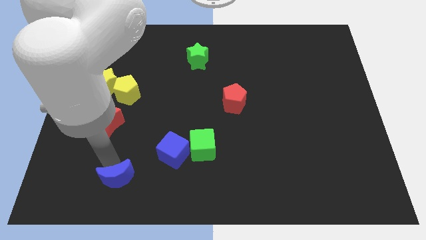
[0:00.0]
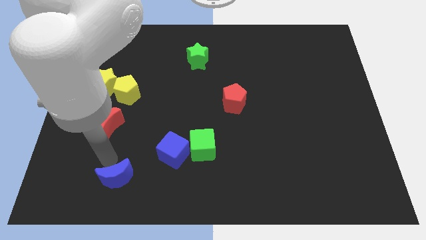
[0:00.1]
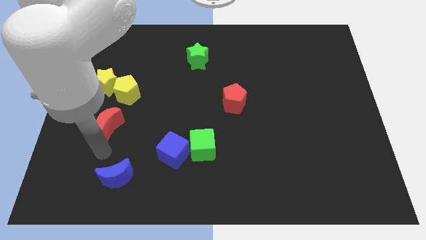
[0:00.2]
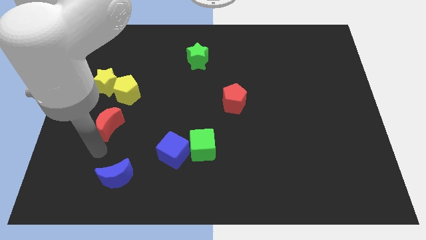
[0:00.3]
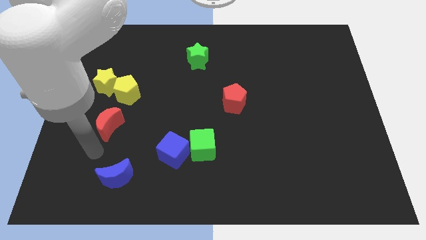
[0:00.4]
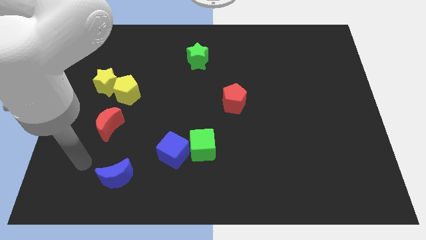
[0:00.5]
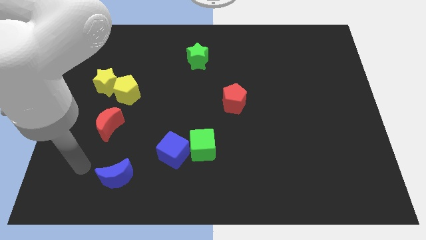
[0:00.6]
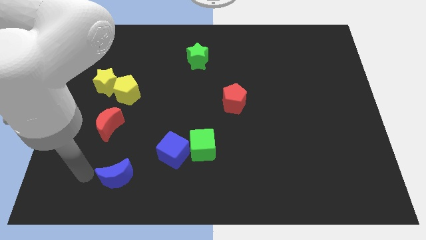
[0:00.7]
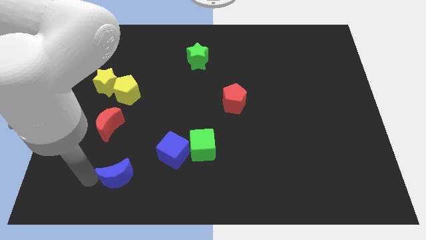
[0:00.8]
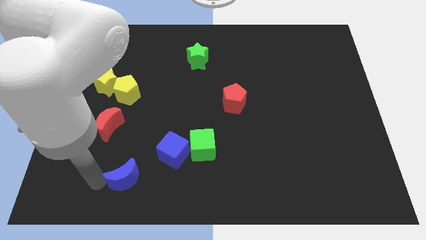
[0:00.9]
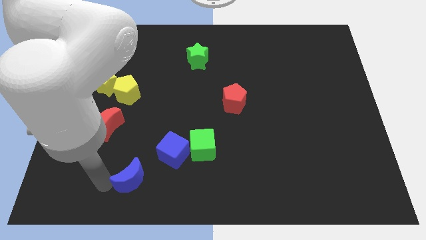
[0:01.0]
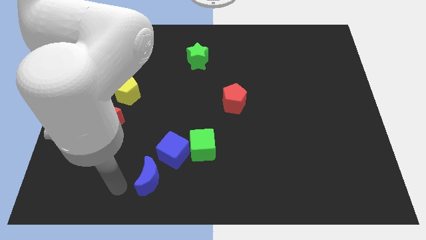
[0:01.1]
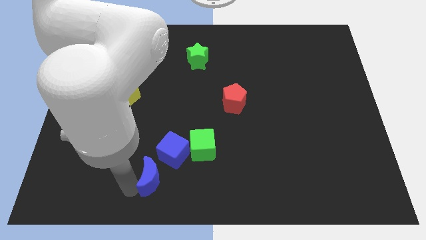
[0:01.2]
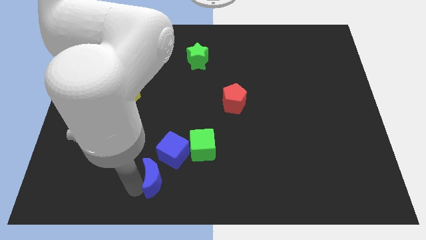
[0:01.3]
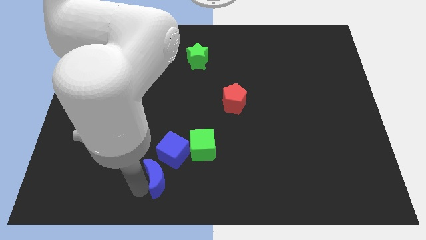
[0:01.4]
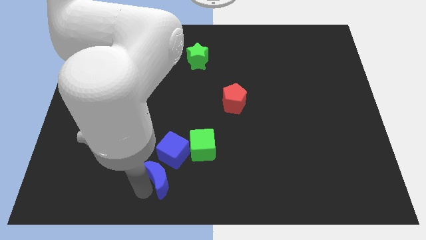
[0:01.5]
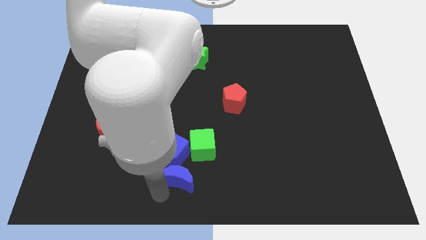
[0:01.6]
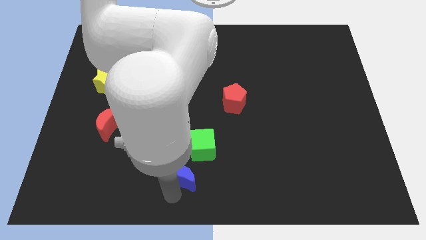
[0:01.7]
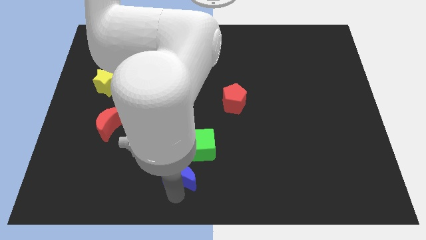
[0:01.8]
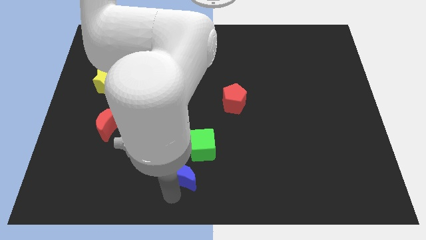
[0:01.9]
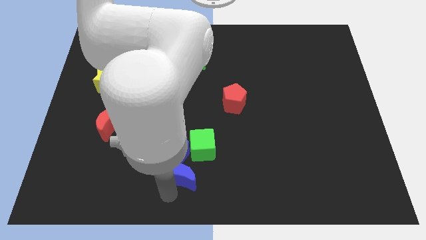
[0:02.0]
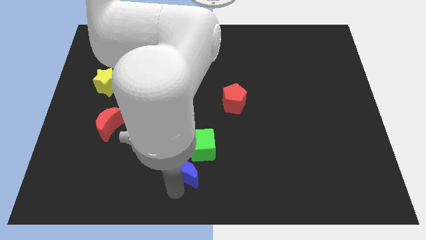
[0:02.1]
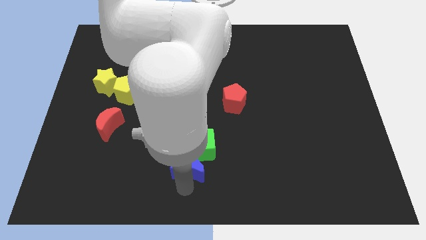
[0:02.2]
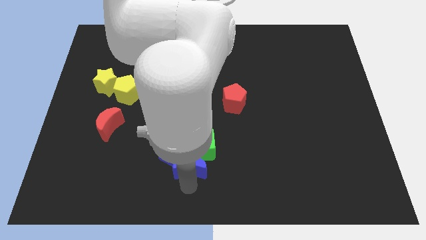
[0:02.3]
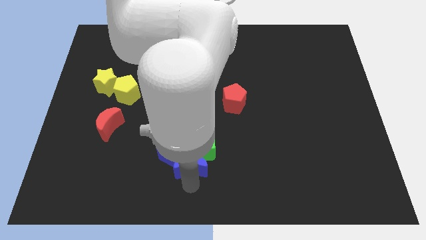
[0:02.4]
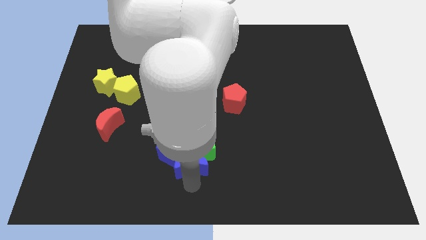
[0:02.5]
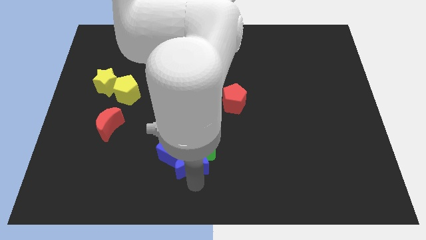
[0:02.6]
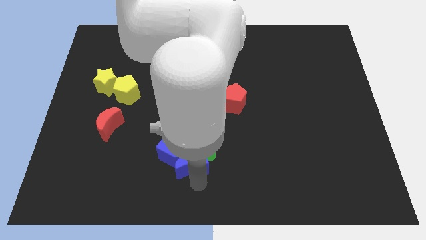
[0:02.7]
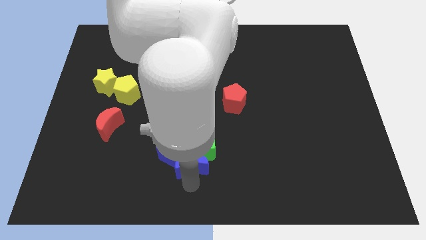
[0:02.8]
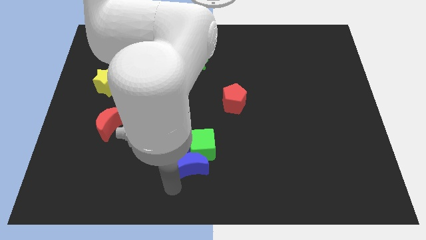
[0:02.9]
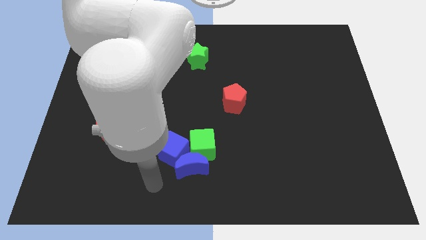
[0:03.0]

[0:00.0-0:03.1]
place the blue moon under the green and blue cubes

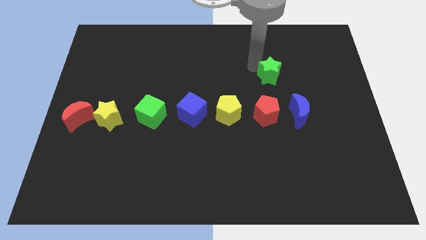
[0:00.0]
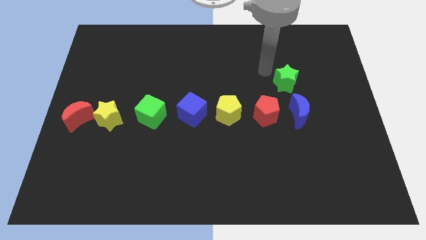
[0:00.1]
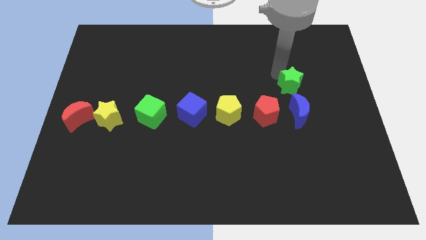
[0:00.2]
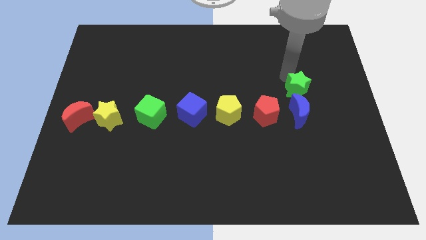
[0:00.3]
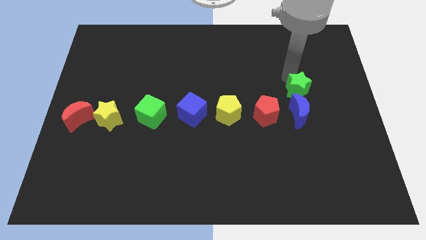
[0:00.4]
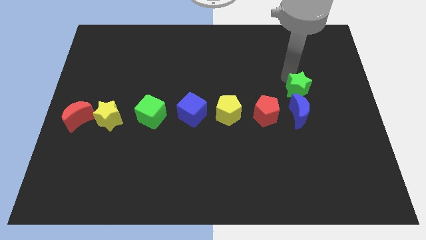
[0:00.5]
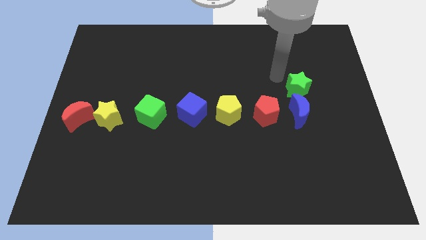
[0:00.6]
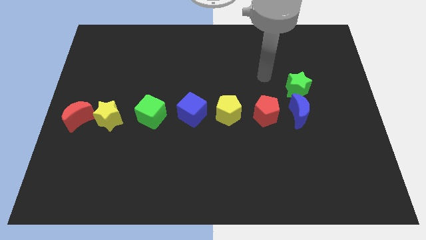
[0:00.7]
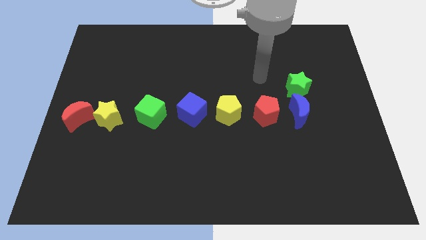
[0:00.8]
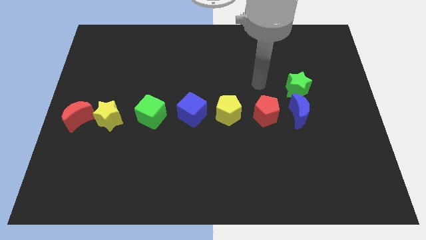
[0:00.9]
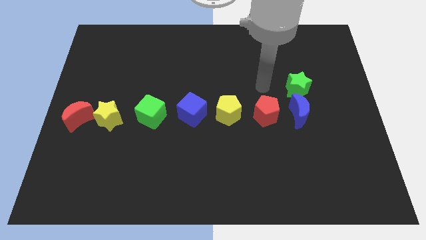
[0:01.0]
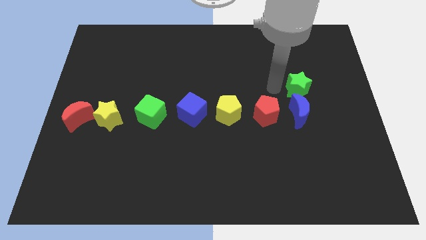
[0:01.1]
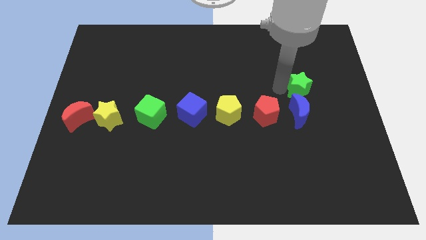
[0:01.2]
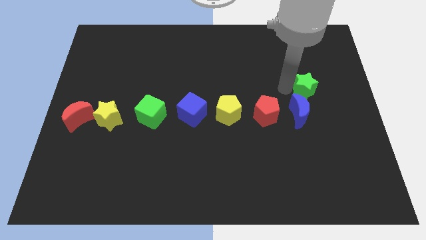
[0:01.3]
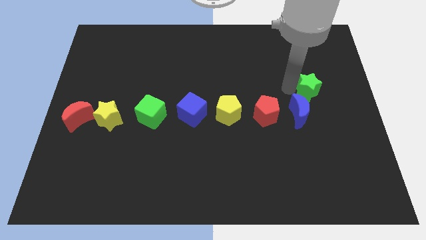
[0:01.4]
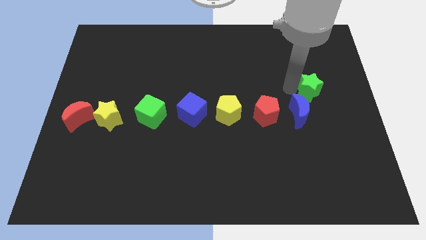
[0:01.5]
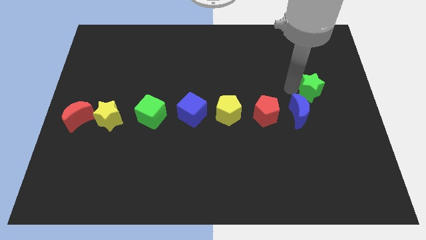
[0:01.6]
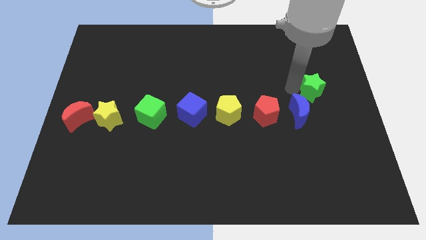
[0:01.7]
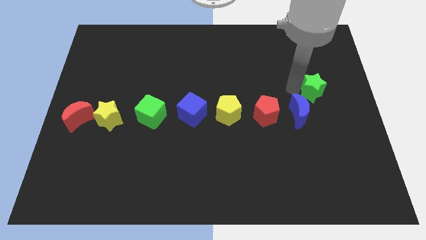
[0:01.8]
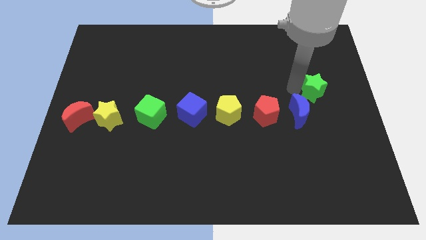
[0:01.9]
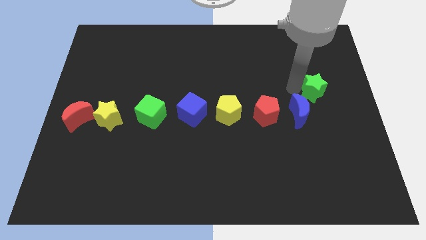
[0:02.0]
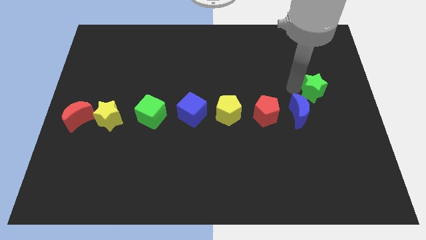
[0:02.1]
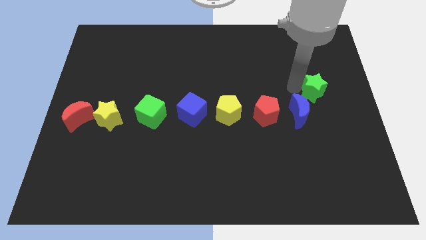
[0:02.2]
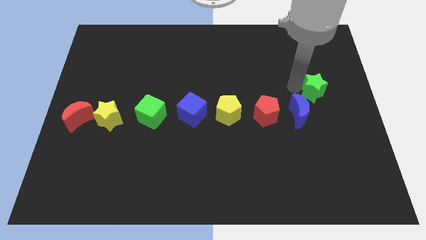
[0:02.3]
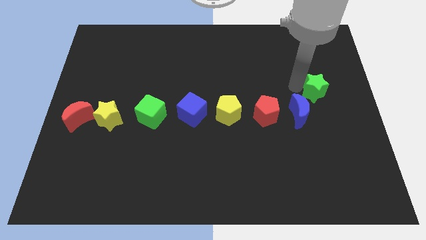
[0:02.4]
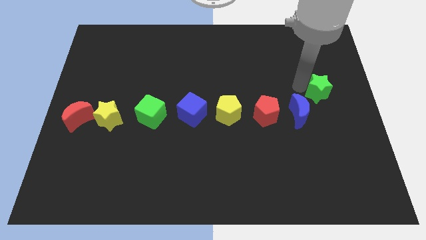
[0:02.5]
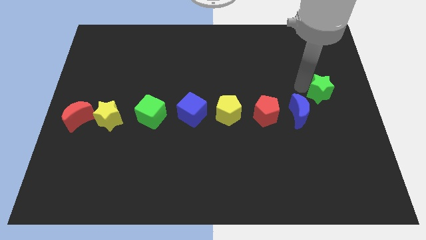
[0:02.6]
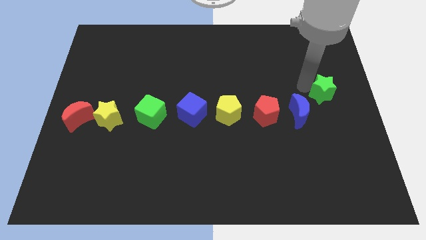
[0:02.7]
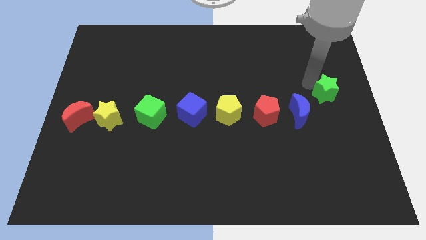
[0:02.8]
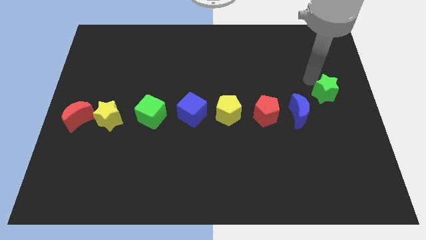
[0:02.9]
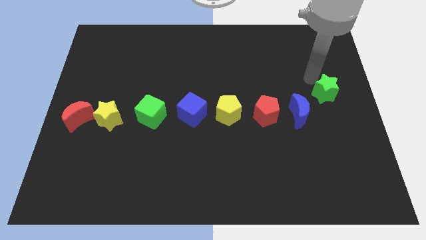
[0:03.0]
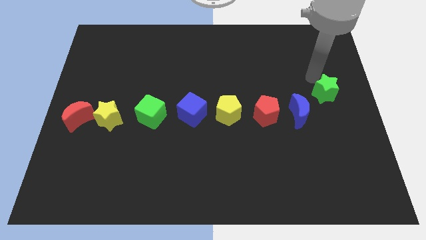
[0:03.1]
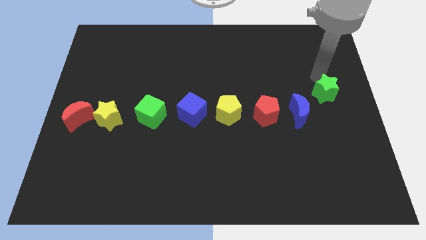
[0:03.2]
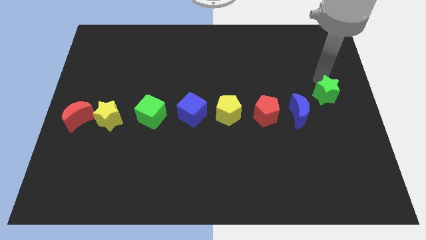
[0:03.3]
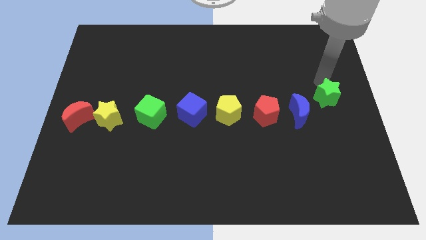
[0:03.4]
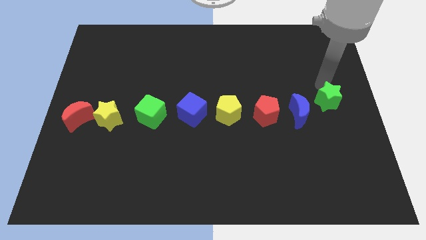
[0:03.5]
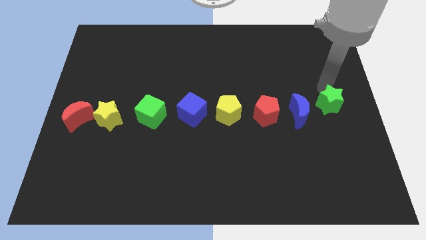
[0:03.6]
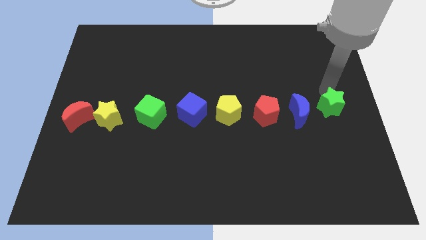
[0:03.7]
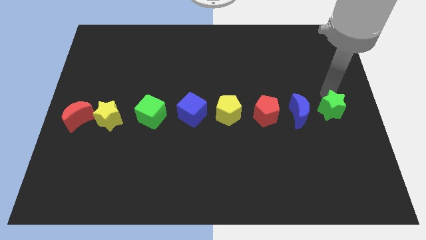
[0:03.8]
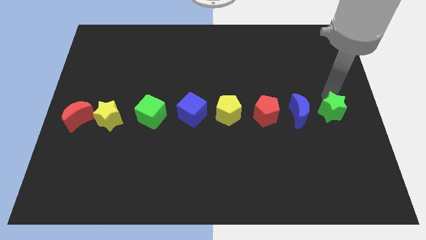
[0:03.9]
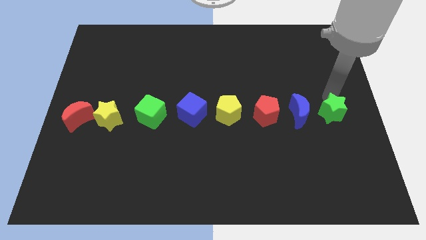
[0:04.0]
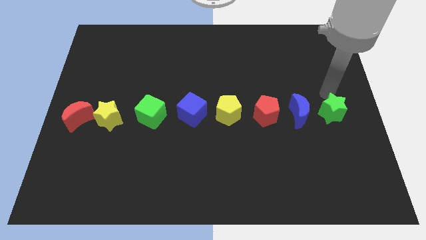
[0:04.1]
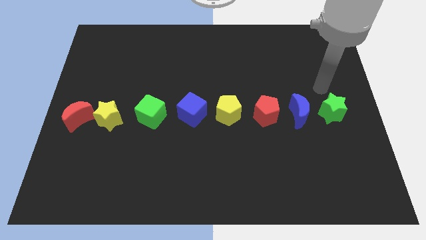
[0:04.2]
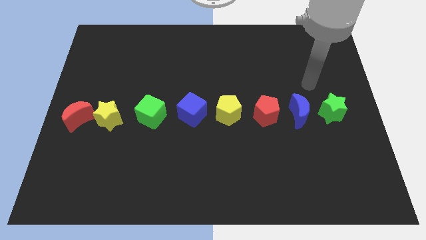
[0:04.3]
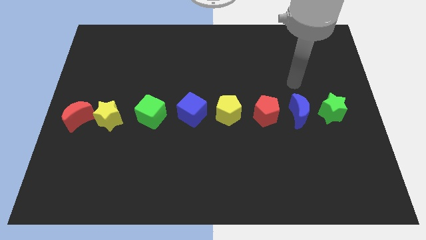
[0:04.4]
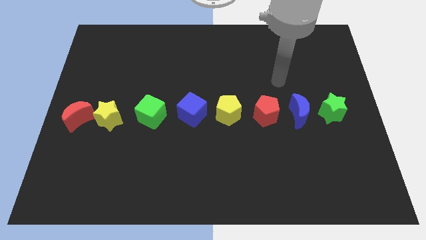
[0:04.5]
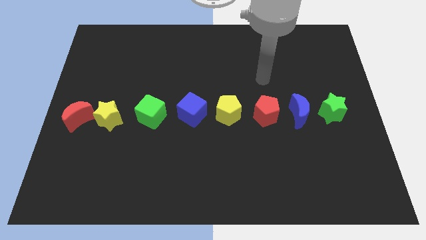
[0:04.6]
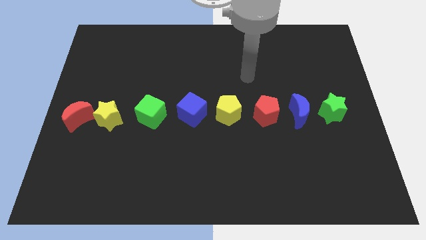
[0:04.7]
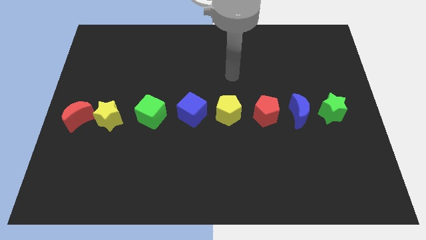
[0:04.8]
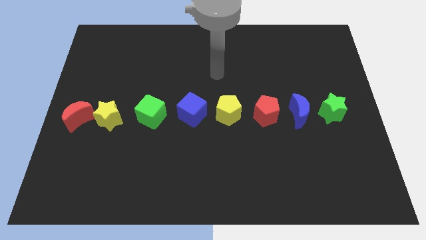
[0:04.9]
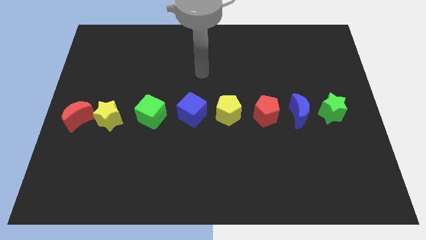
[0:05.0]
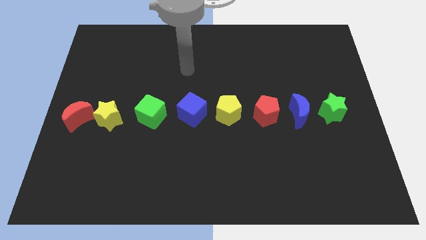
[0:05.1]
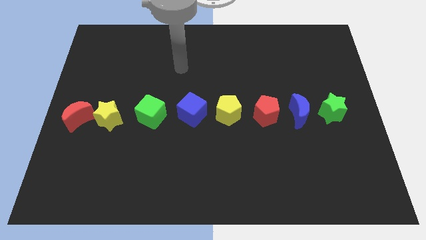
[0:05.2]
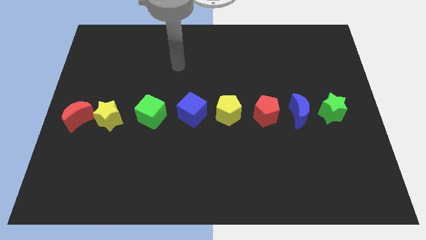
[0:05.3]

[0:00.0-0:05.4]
move green star towards the blue crescent

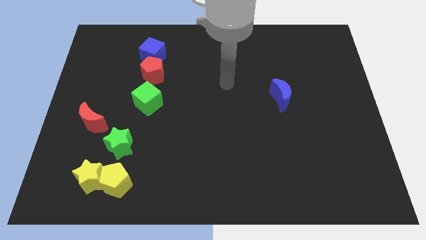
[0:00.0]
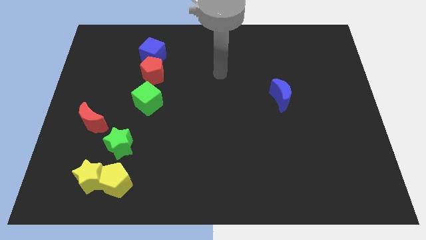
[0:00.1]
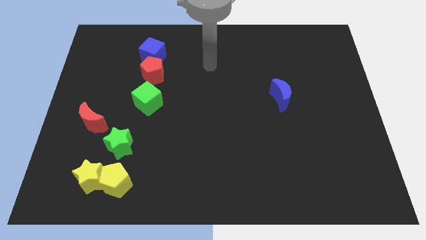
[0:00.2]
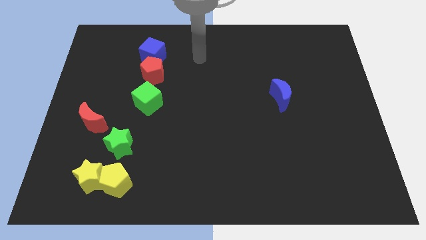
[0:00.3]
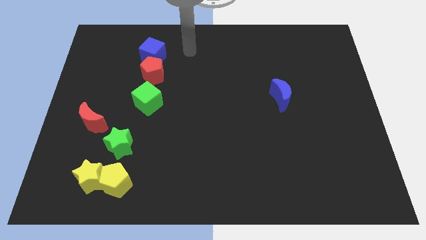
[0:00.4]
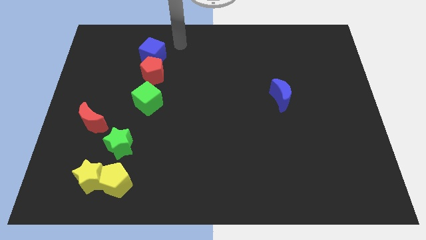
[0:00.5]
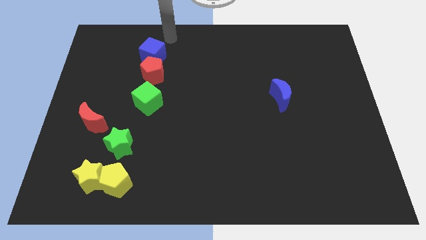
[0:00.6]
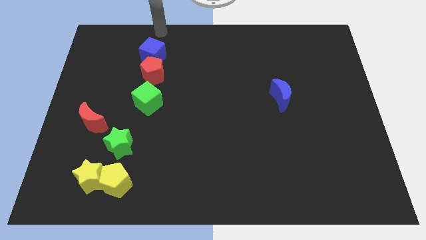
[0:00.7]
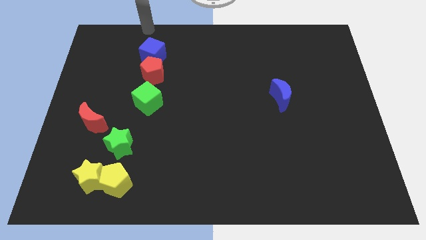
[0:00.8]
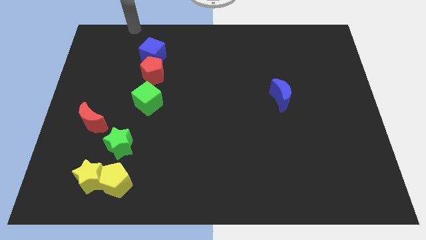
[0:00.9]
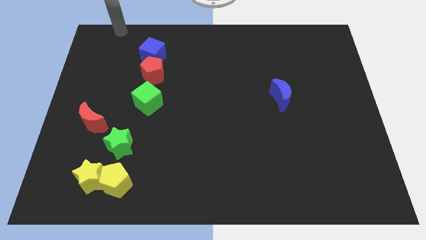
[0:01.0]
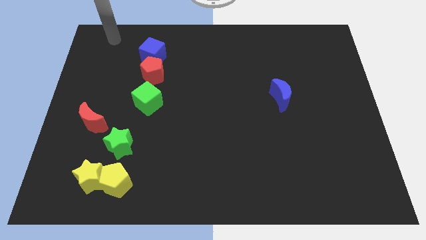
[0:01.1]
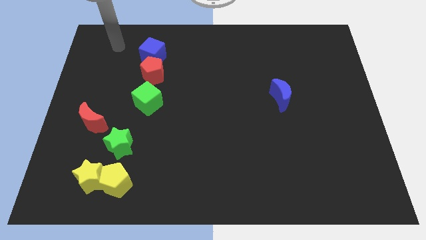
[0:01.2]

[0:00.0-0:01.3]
point your hand at the left side of the blue cube
